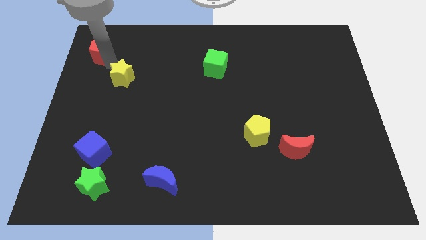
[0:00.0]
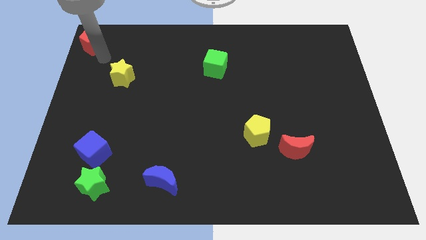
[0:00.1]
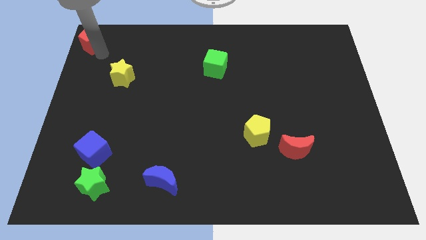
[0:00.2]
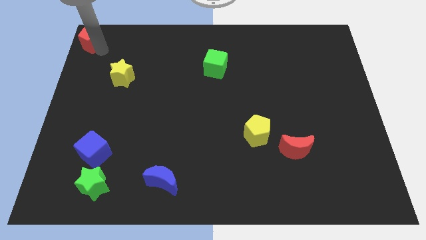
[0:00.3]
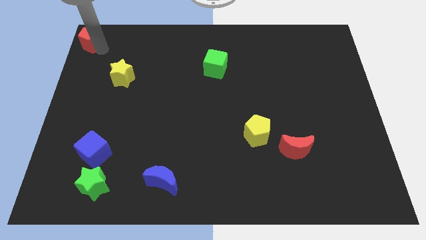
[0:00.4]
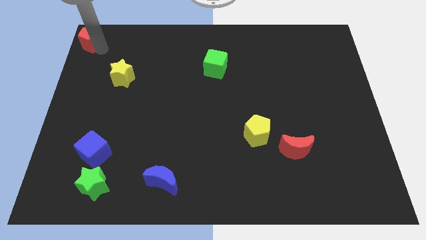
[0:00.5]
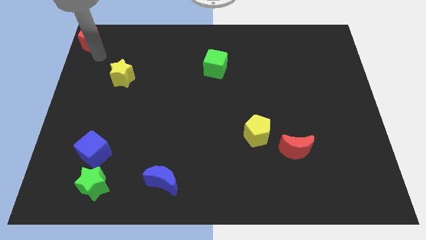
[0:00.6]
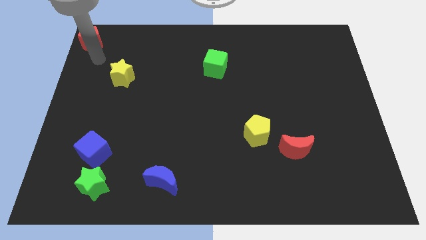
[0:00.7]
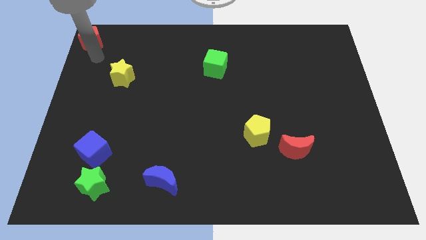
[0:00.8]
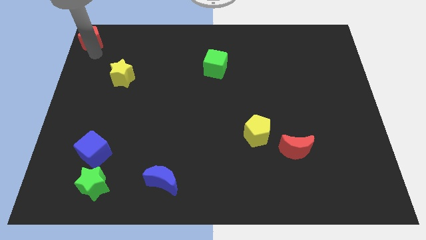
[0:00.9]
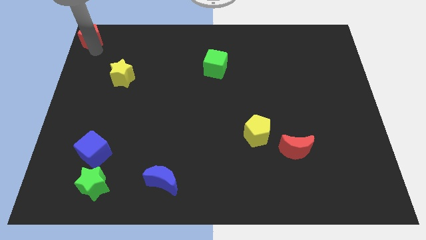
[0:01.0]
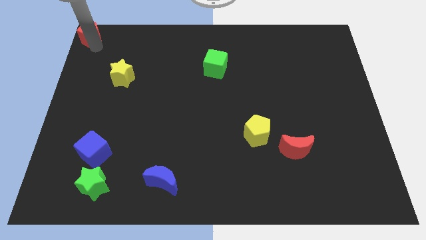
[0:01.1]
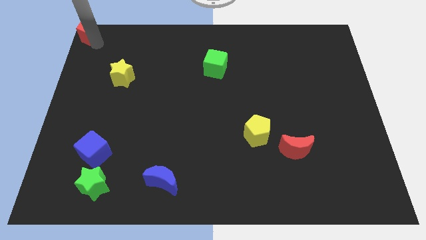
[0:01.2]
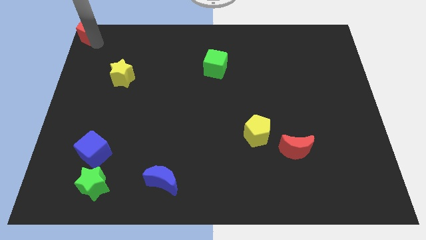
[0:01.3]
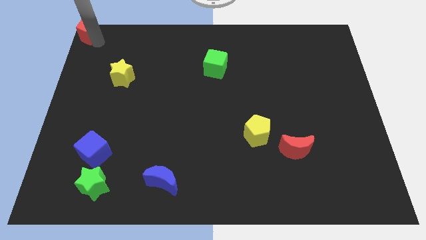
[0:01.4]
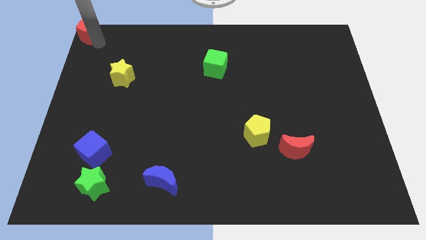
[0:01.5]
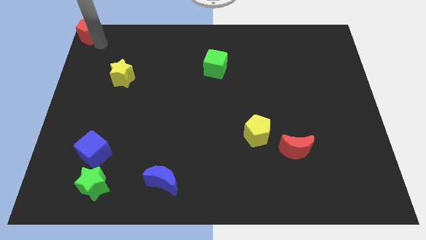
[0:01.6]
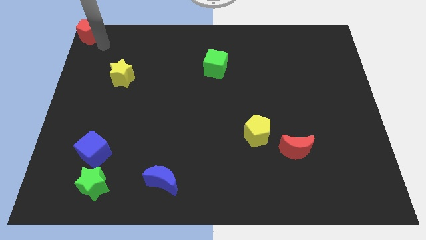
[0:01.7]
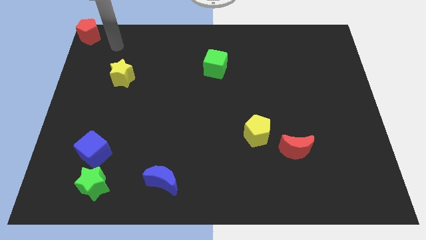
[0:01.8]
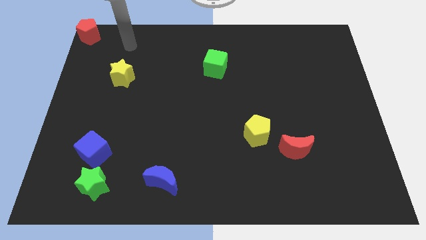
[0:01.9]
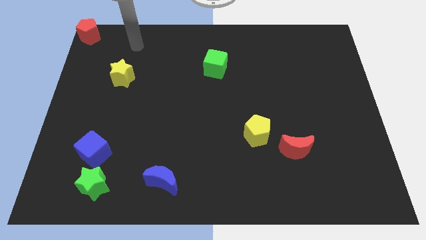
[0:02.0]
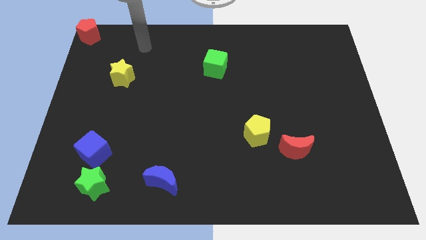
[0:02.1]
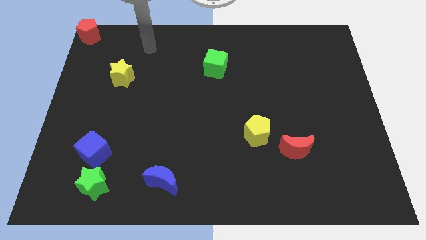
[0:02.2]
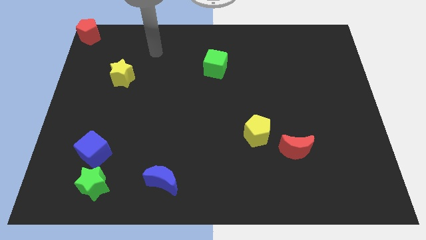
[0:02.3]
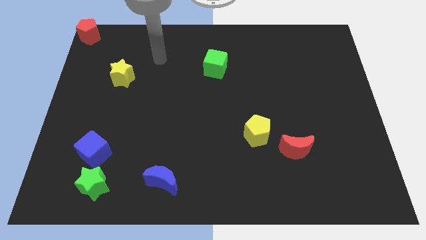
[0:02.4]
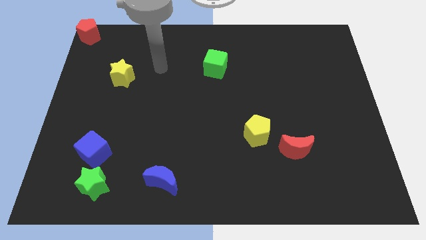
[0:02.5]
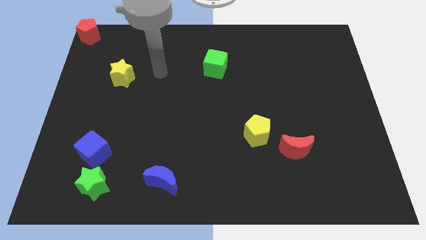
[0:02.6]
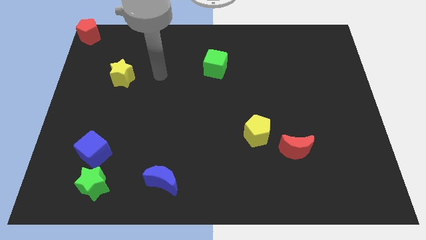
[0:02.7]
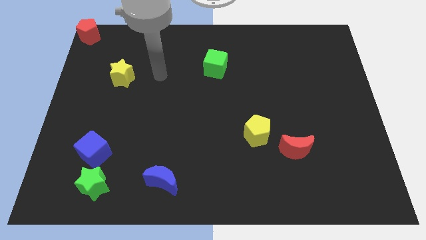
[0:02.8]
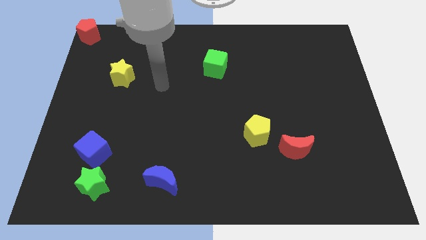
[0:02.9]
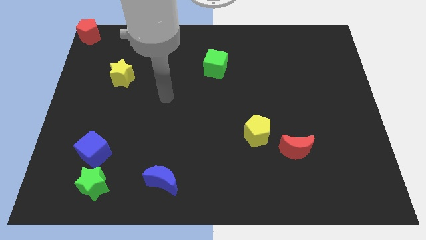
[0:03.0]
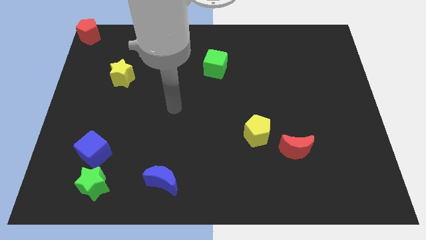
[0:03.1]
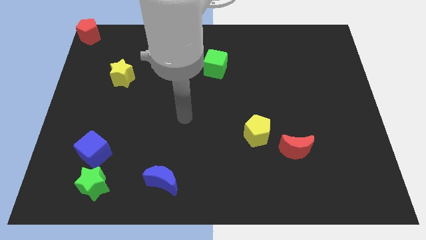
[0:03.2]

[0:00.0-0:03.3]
place the red pentagon to the top left corner of the board

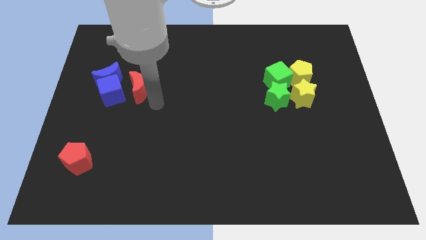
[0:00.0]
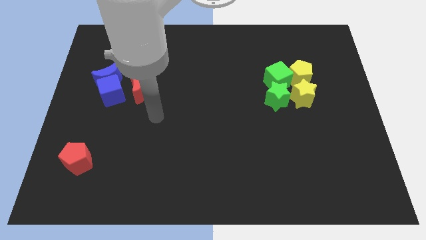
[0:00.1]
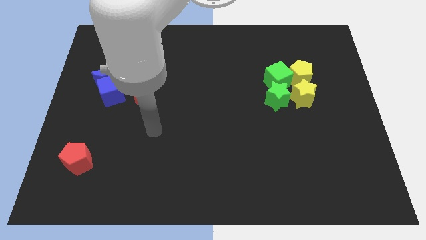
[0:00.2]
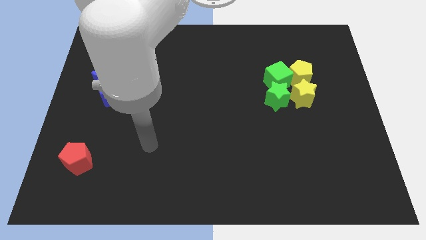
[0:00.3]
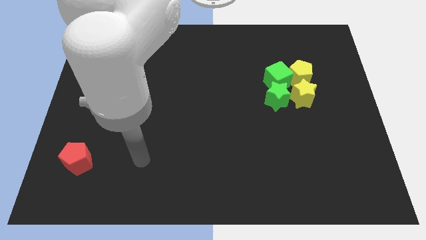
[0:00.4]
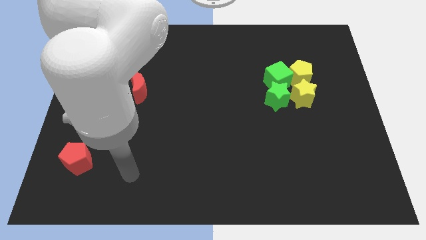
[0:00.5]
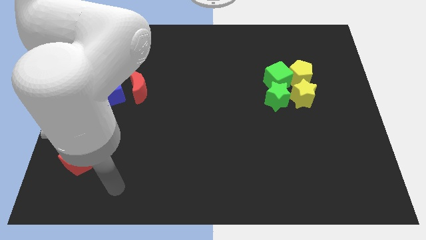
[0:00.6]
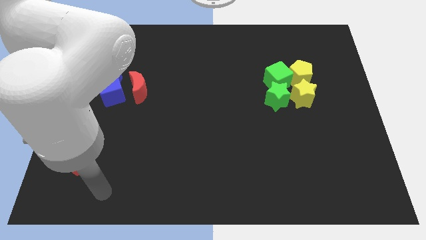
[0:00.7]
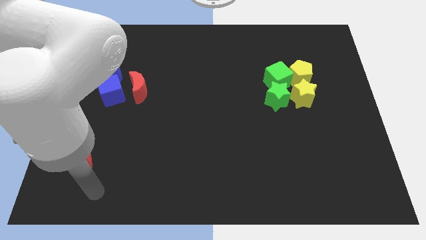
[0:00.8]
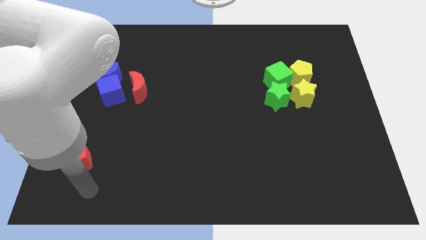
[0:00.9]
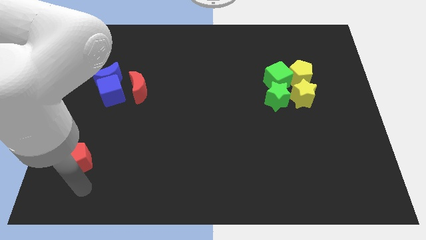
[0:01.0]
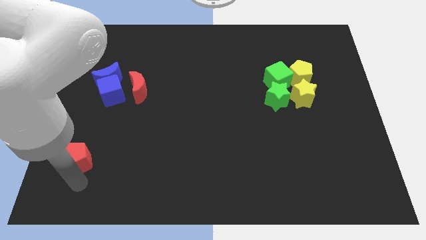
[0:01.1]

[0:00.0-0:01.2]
move your arm away from the red moon

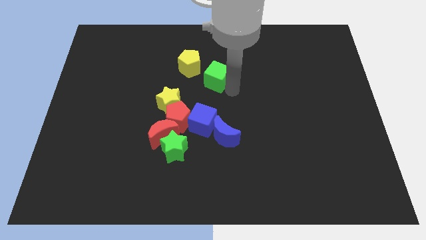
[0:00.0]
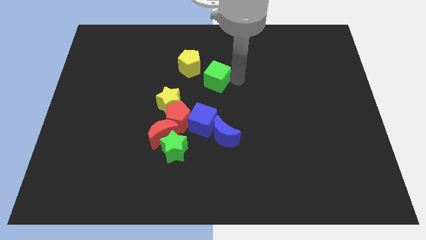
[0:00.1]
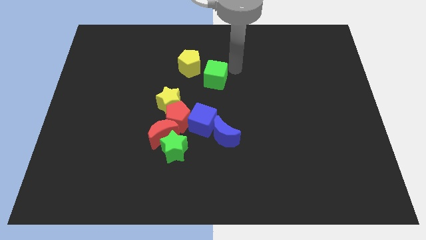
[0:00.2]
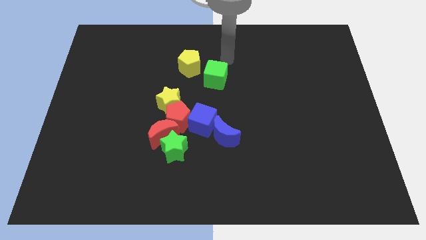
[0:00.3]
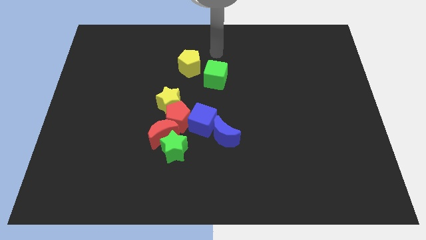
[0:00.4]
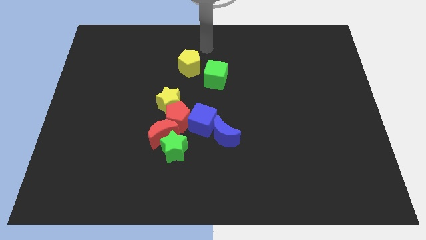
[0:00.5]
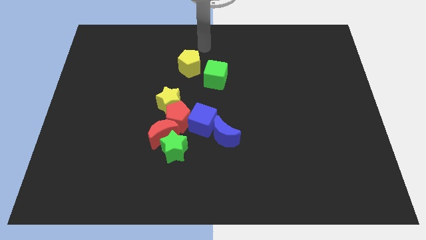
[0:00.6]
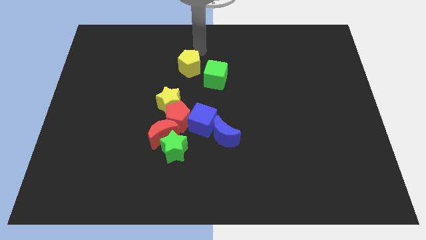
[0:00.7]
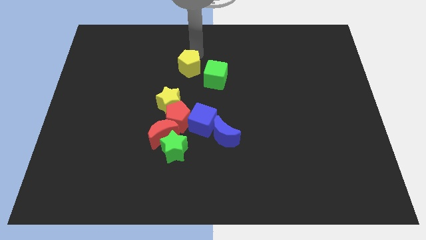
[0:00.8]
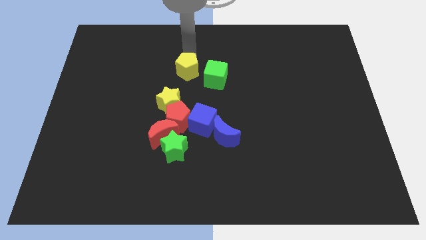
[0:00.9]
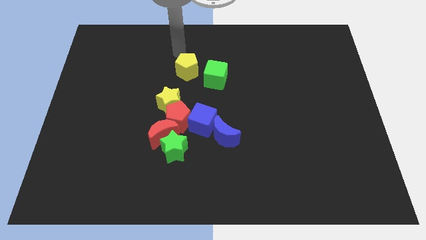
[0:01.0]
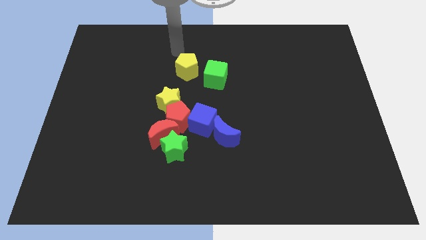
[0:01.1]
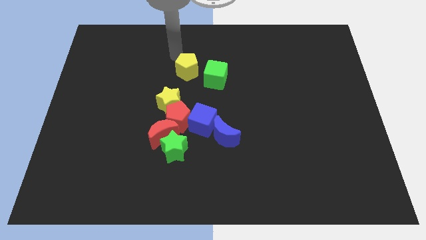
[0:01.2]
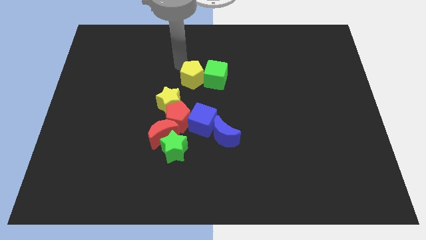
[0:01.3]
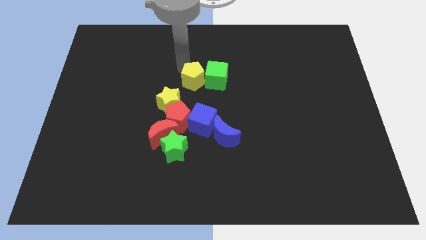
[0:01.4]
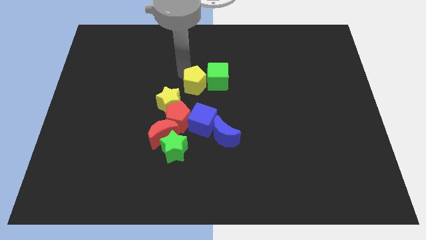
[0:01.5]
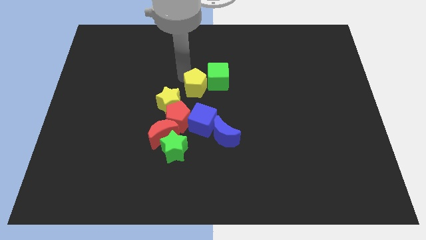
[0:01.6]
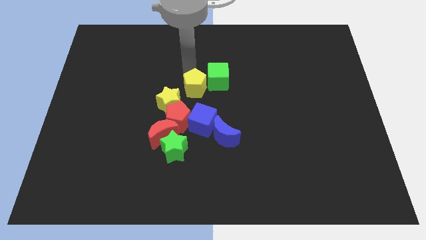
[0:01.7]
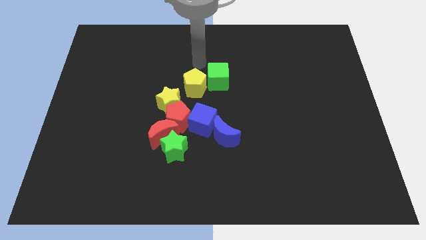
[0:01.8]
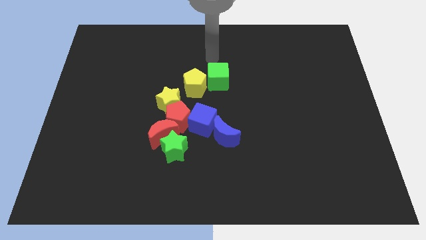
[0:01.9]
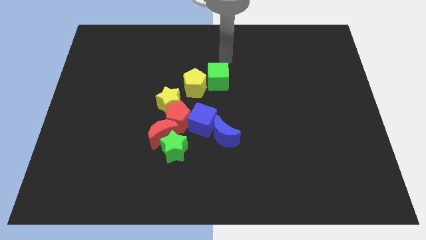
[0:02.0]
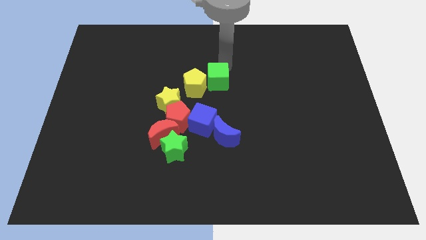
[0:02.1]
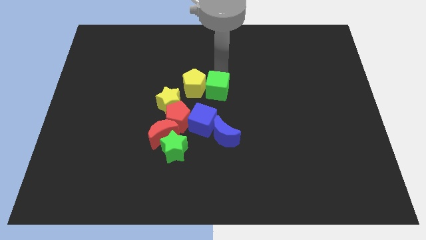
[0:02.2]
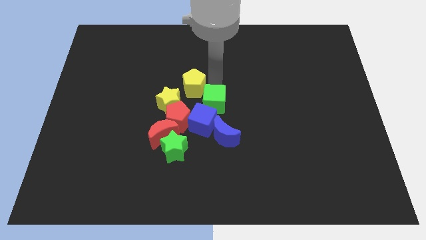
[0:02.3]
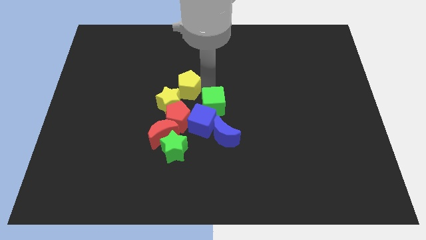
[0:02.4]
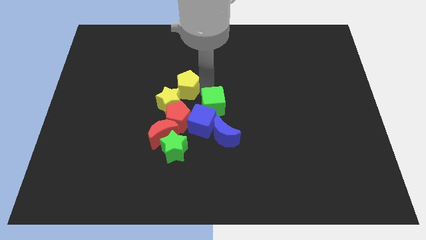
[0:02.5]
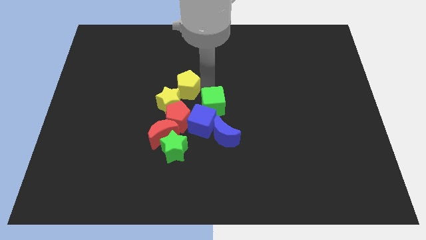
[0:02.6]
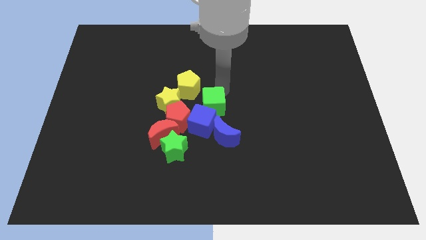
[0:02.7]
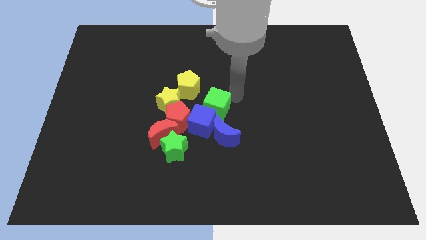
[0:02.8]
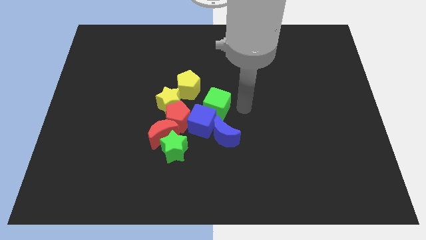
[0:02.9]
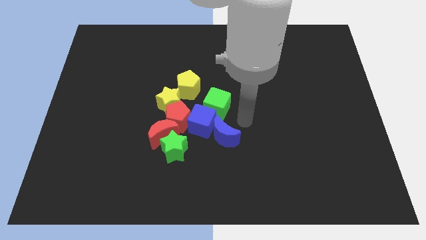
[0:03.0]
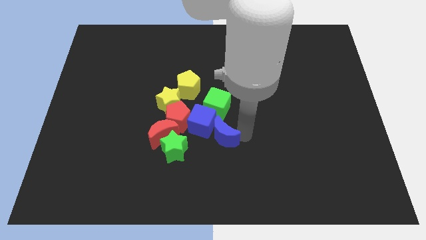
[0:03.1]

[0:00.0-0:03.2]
push yellow pentagon and green cube towards the group of blocks

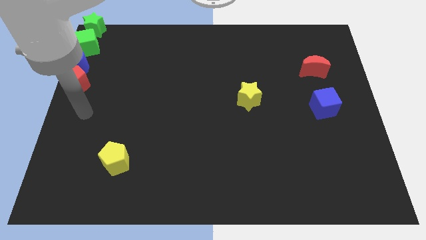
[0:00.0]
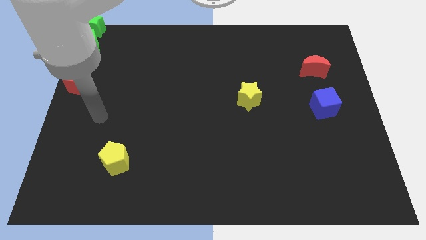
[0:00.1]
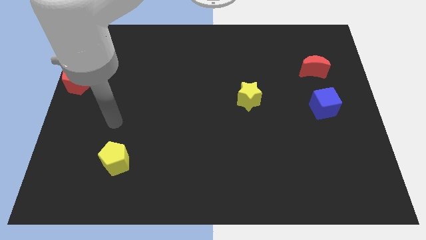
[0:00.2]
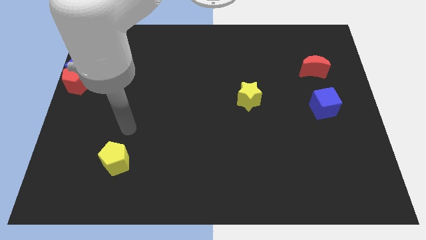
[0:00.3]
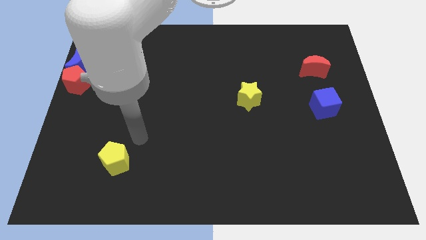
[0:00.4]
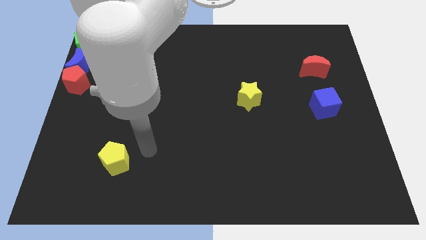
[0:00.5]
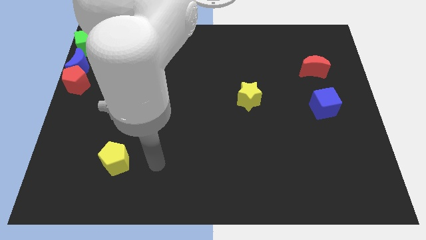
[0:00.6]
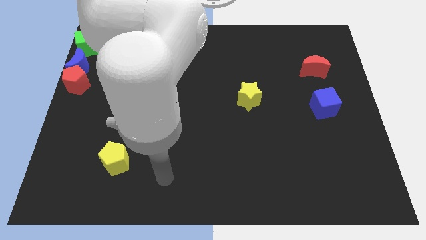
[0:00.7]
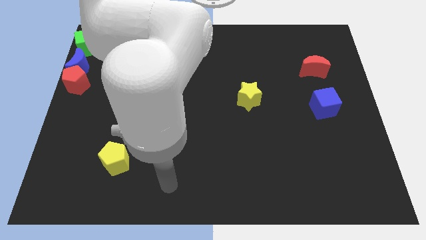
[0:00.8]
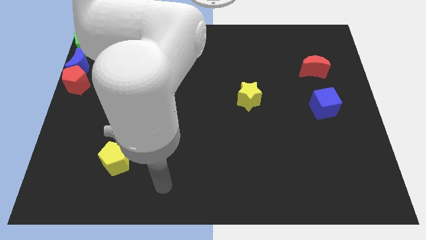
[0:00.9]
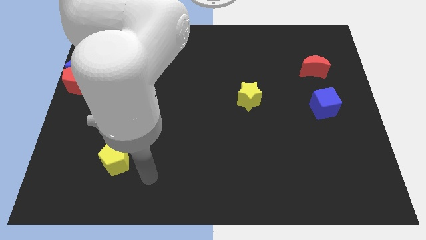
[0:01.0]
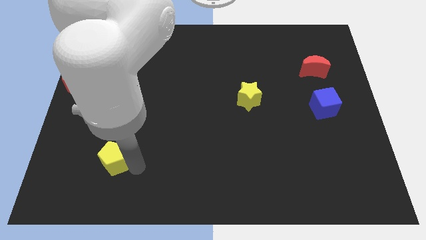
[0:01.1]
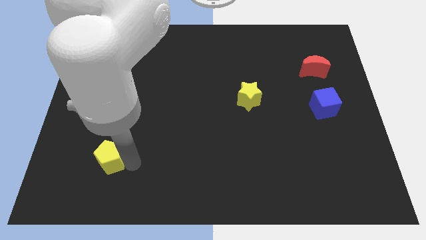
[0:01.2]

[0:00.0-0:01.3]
tap the yellow pentagon

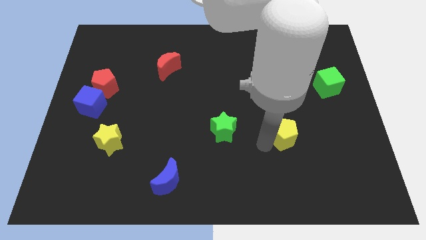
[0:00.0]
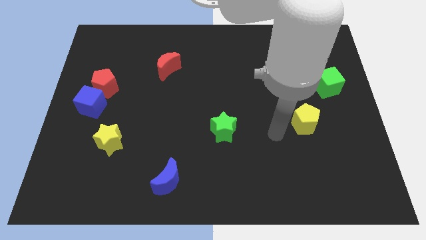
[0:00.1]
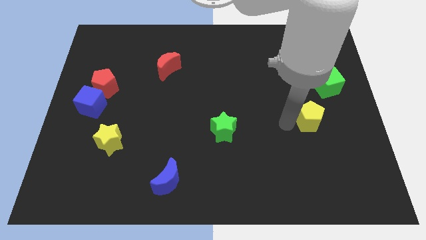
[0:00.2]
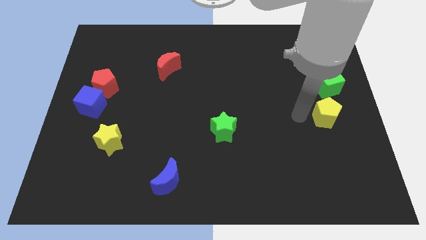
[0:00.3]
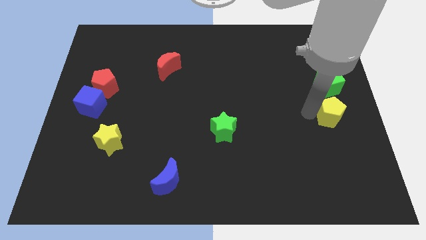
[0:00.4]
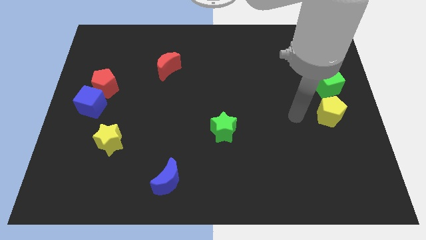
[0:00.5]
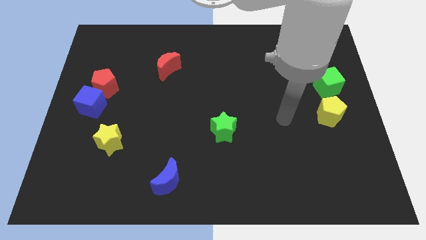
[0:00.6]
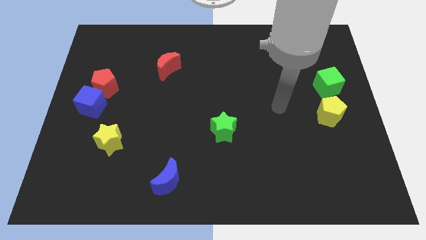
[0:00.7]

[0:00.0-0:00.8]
push the yellow pentagon at the bottom side of the green cube
